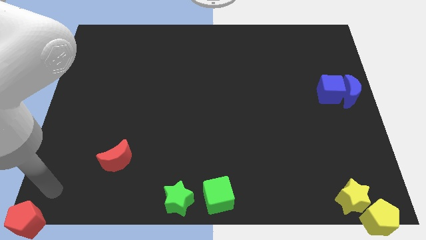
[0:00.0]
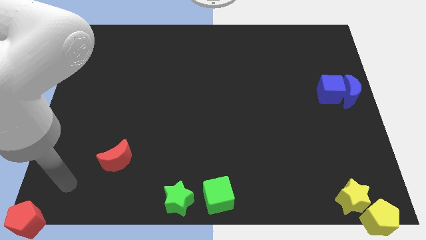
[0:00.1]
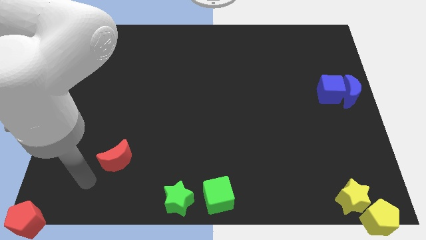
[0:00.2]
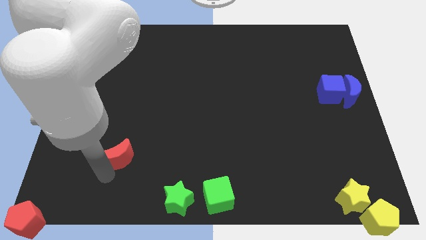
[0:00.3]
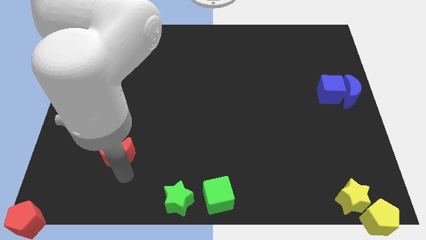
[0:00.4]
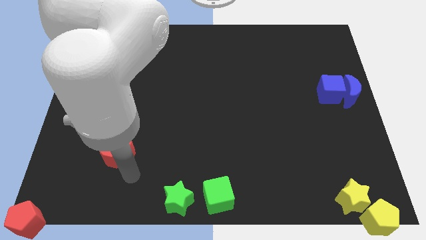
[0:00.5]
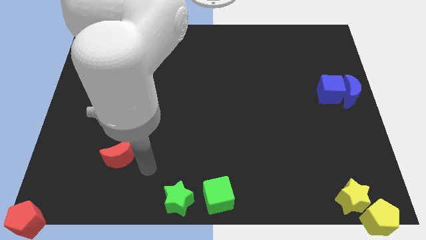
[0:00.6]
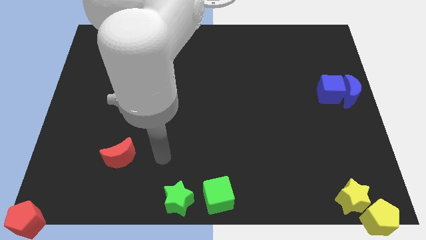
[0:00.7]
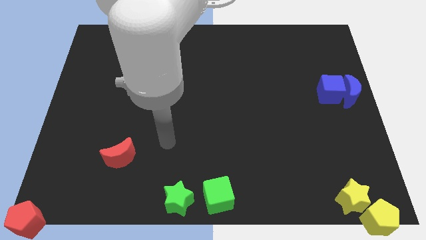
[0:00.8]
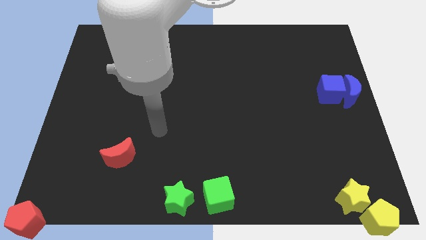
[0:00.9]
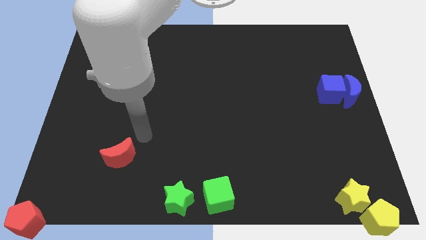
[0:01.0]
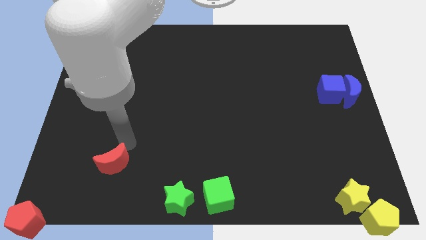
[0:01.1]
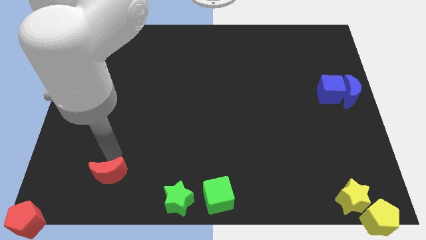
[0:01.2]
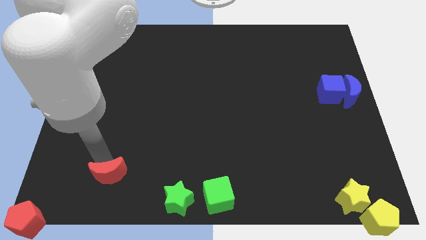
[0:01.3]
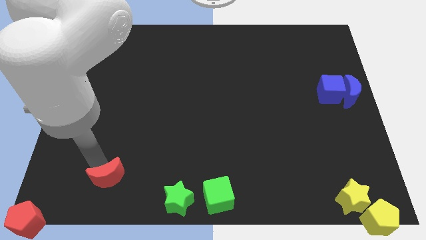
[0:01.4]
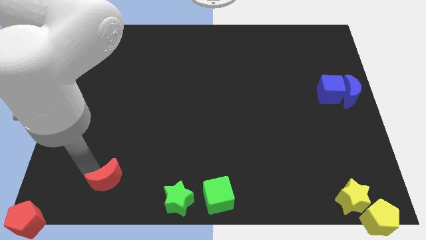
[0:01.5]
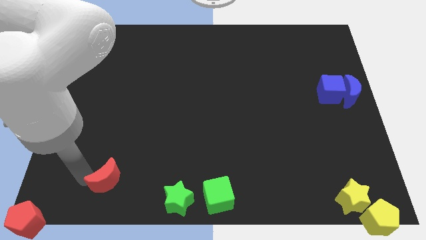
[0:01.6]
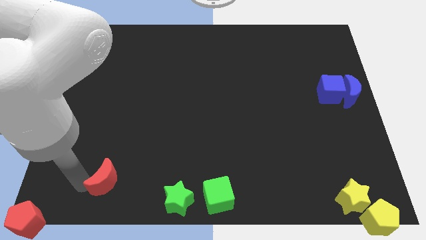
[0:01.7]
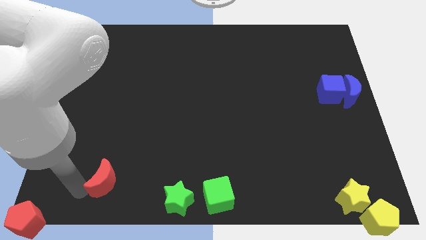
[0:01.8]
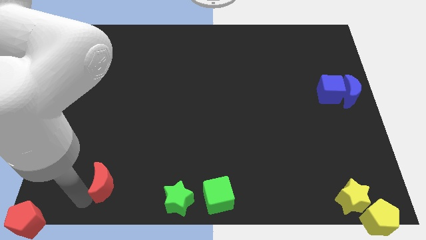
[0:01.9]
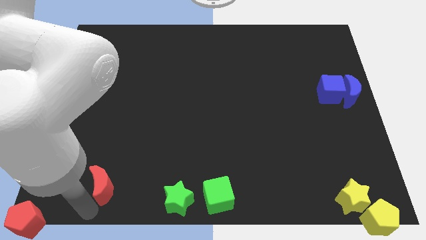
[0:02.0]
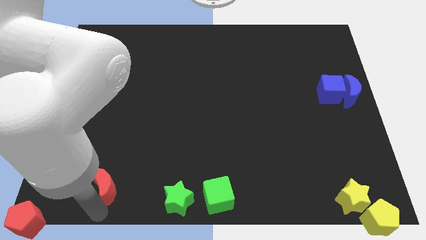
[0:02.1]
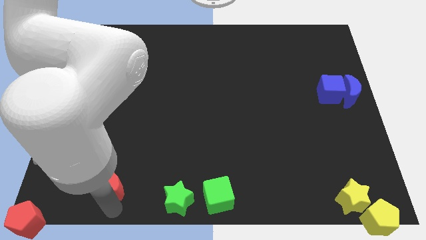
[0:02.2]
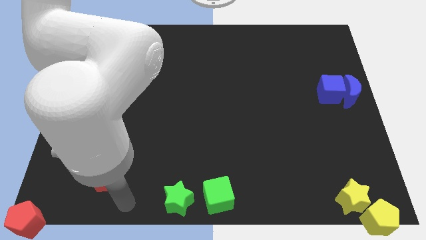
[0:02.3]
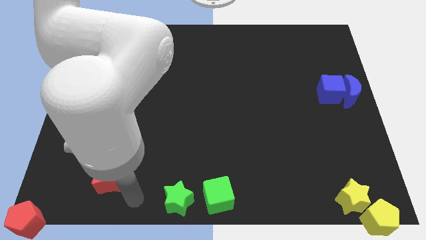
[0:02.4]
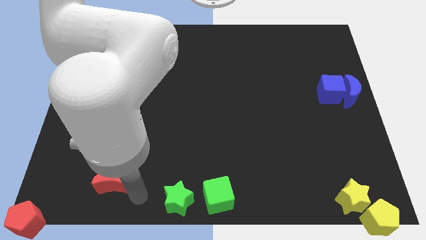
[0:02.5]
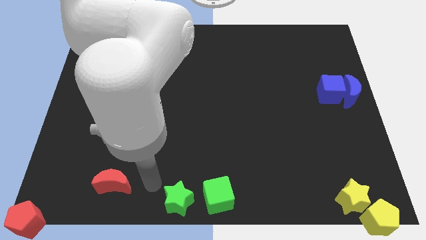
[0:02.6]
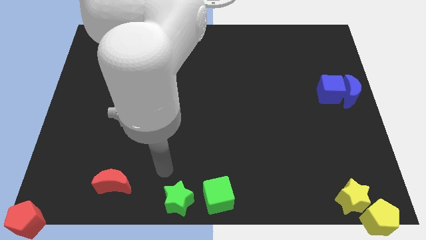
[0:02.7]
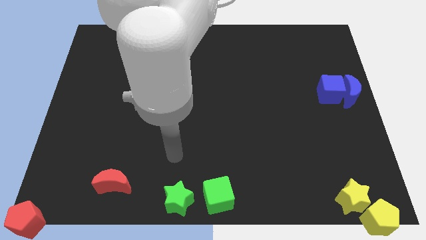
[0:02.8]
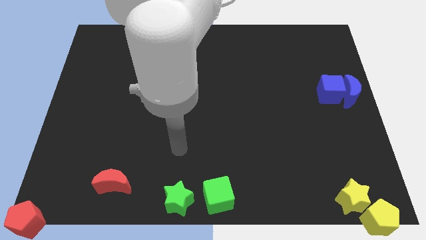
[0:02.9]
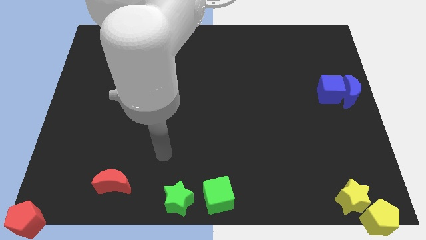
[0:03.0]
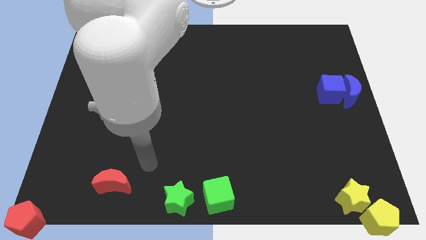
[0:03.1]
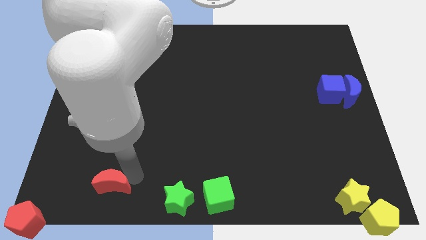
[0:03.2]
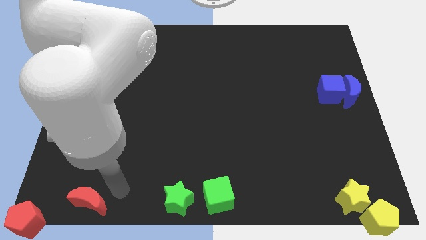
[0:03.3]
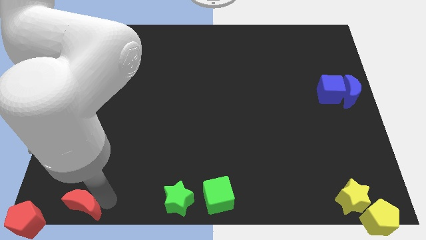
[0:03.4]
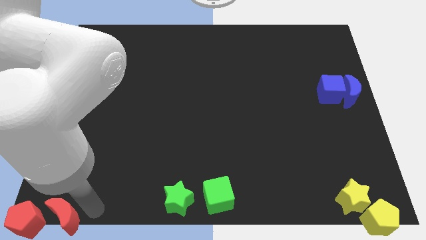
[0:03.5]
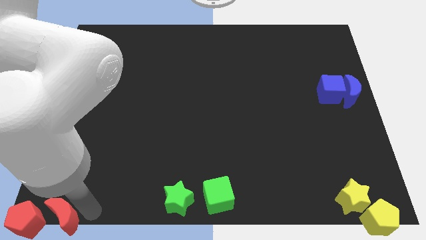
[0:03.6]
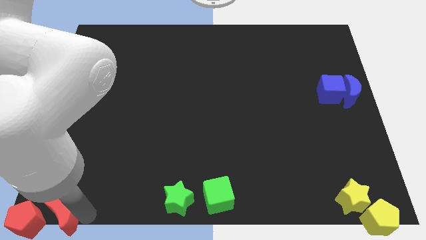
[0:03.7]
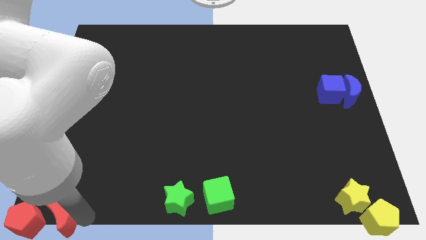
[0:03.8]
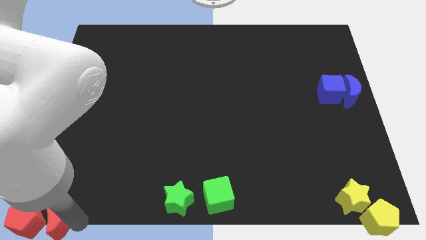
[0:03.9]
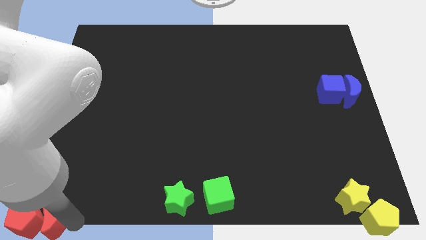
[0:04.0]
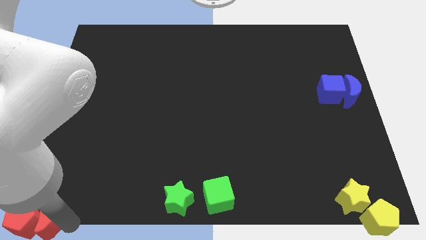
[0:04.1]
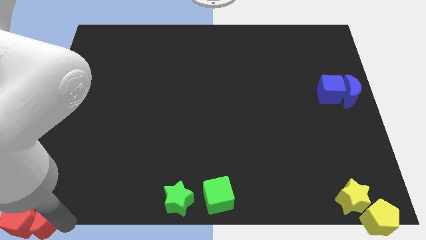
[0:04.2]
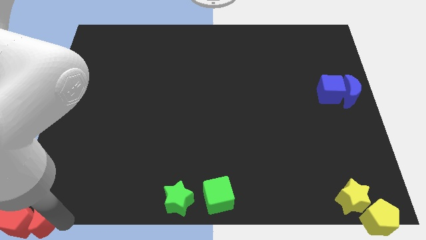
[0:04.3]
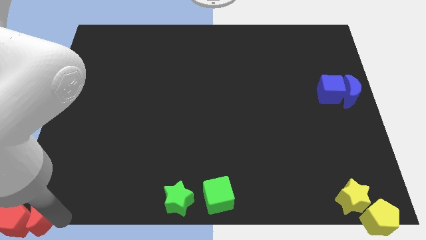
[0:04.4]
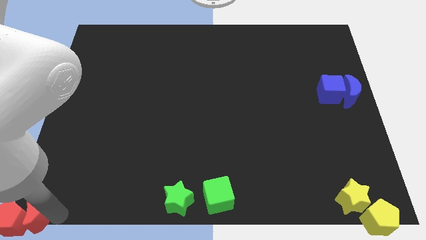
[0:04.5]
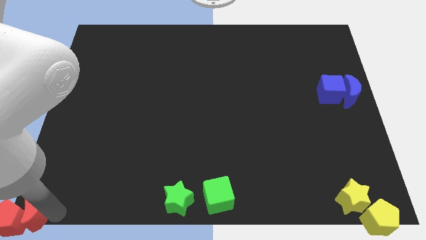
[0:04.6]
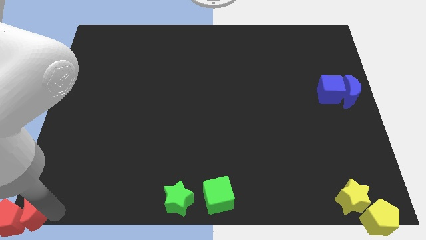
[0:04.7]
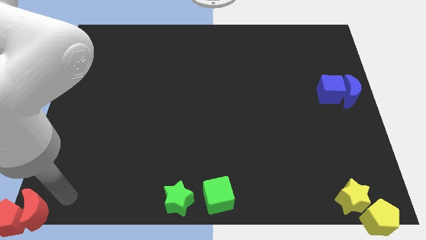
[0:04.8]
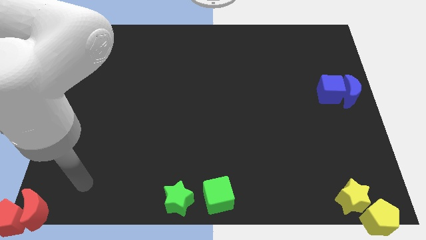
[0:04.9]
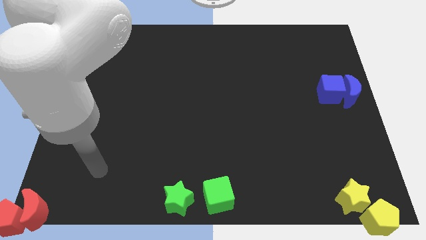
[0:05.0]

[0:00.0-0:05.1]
move red moon into the red pentagon

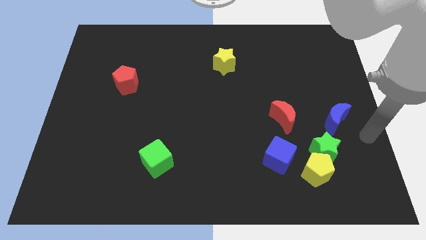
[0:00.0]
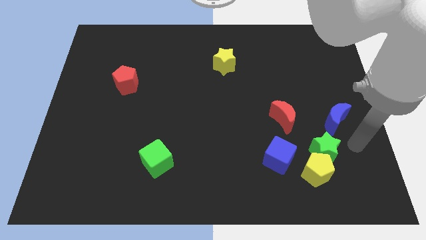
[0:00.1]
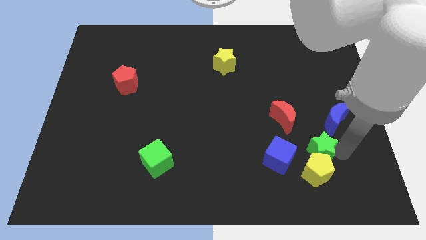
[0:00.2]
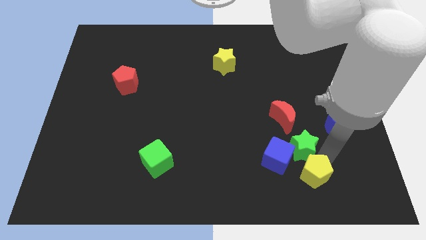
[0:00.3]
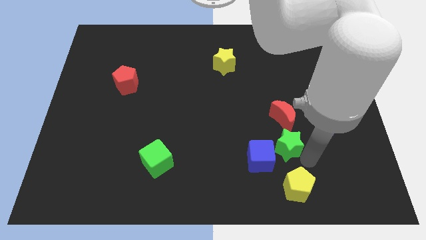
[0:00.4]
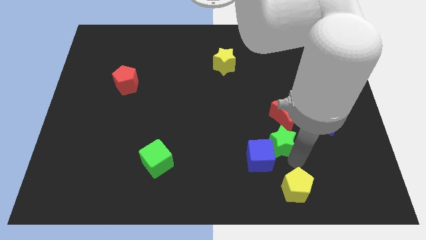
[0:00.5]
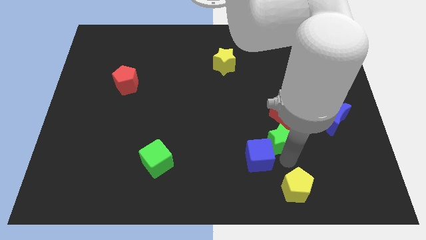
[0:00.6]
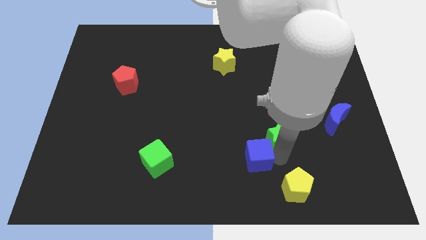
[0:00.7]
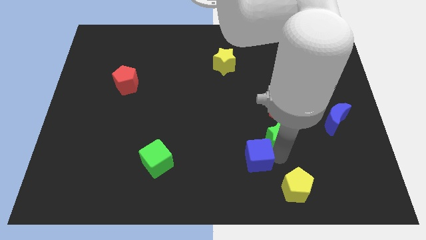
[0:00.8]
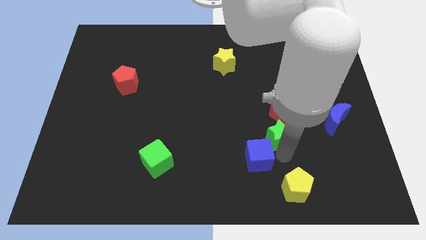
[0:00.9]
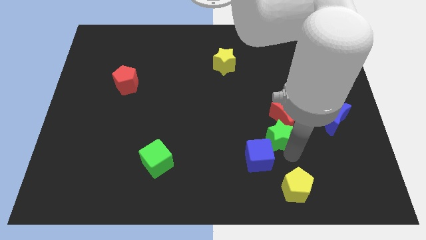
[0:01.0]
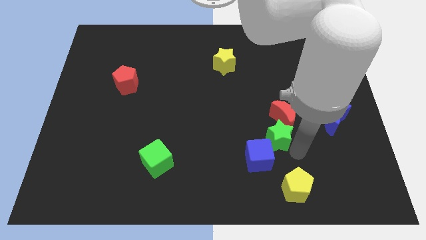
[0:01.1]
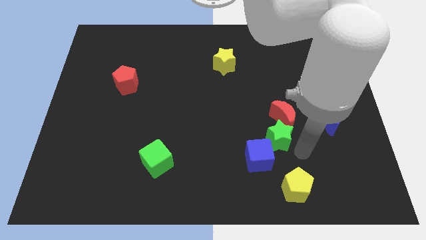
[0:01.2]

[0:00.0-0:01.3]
push the green star to the bottom of the red crescent

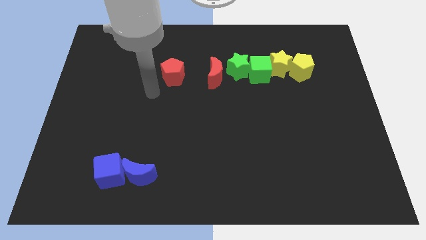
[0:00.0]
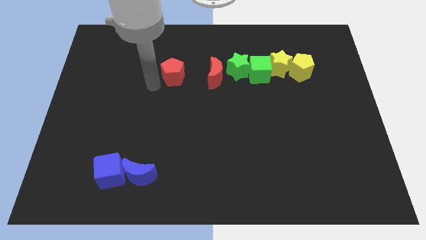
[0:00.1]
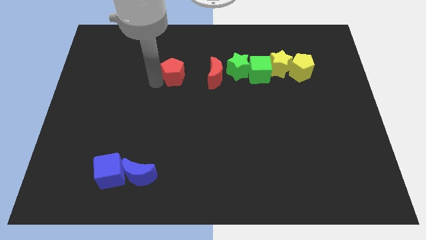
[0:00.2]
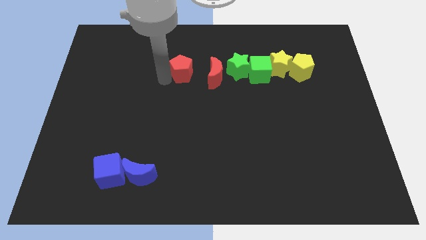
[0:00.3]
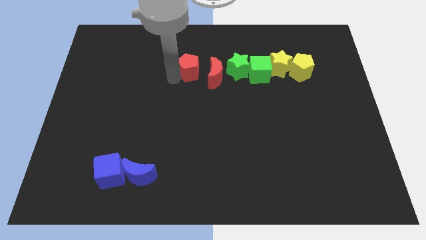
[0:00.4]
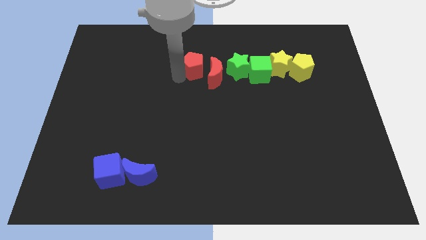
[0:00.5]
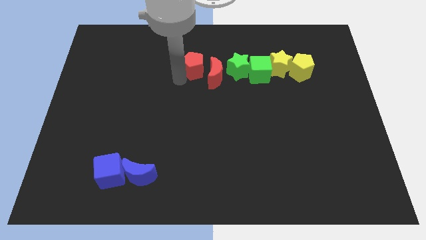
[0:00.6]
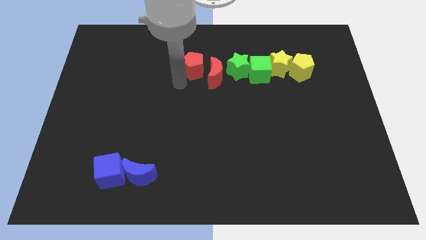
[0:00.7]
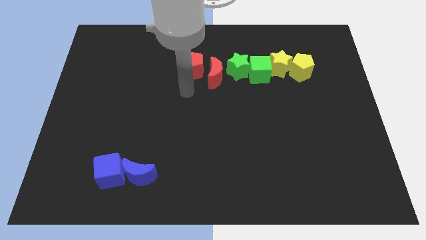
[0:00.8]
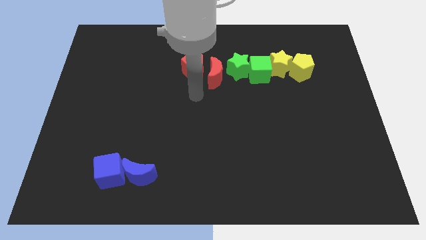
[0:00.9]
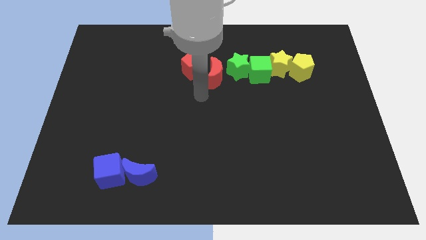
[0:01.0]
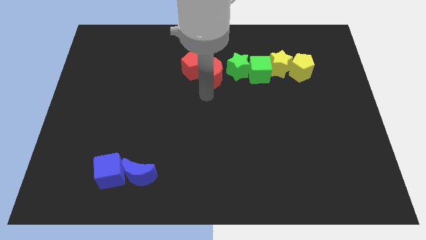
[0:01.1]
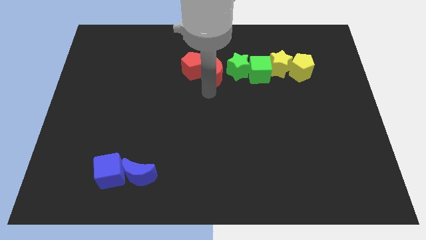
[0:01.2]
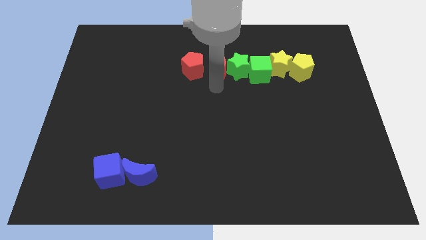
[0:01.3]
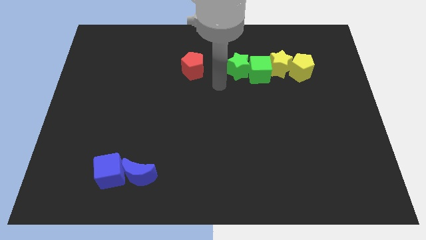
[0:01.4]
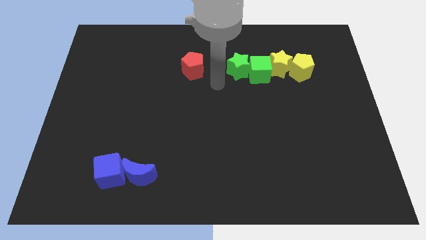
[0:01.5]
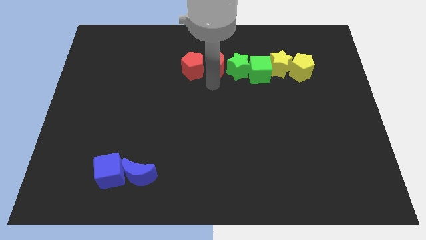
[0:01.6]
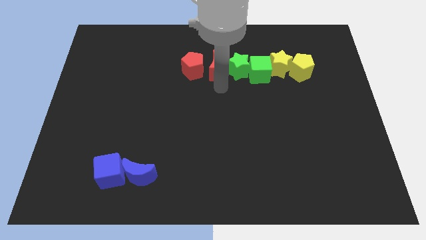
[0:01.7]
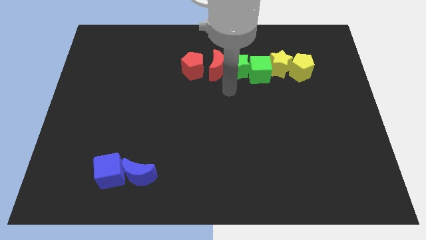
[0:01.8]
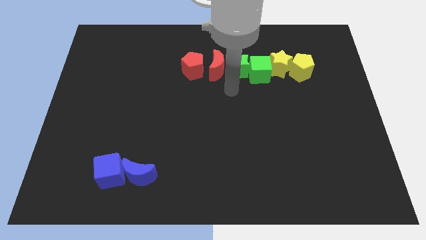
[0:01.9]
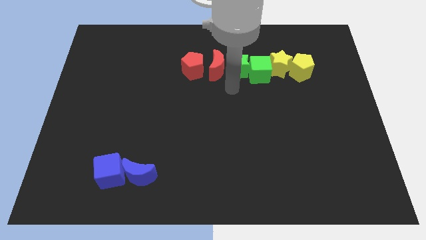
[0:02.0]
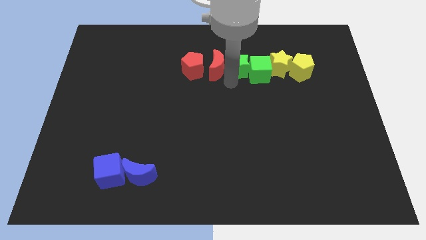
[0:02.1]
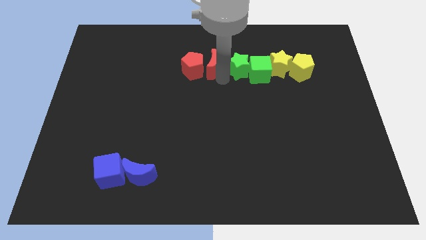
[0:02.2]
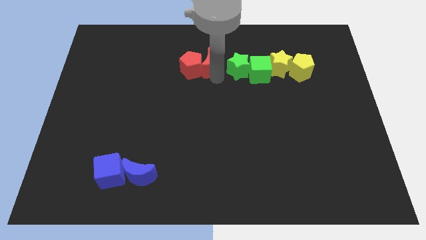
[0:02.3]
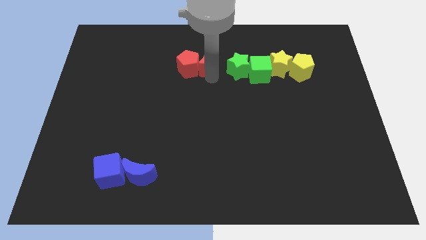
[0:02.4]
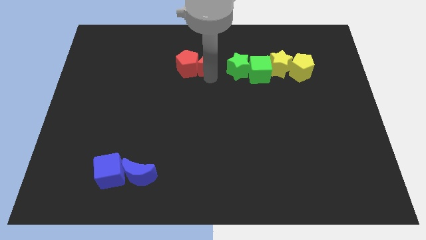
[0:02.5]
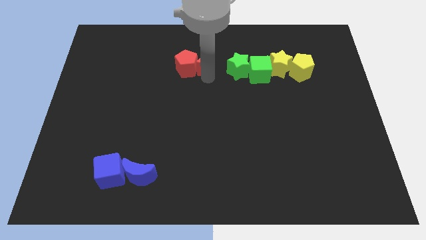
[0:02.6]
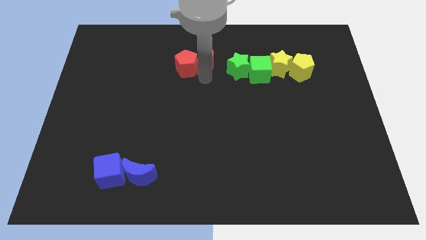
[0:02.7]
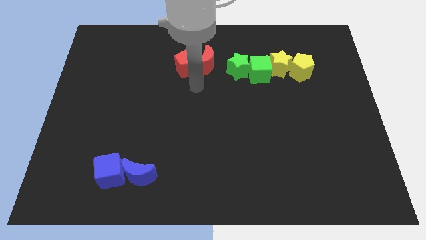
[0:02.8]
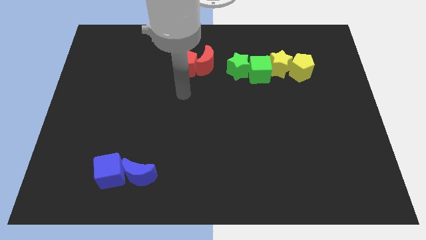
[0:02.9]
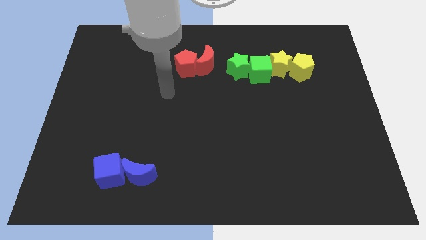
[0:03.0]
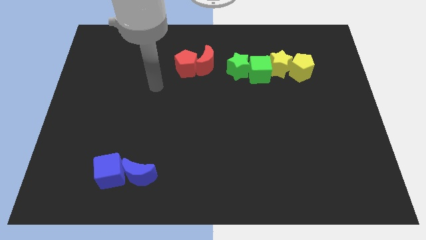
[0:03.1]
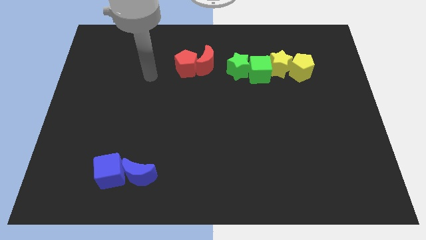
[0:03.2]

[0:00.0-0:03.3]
put the red blocks together at the left side of the green blocks
